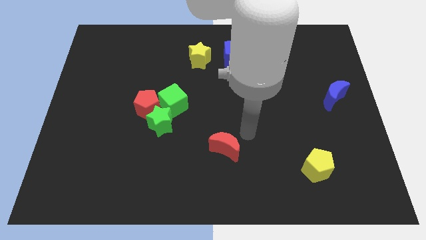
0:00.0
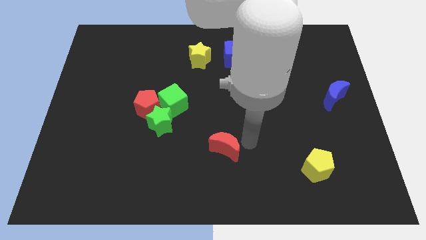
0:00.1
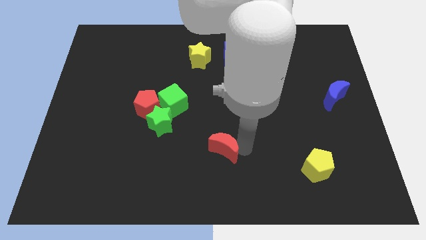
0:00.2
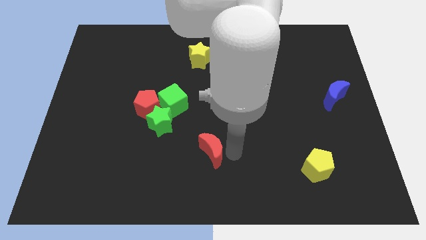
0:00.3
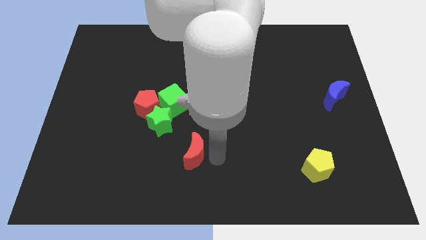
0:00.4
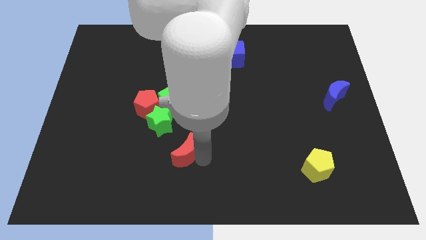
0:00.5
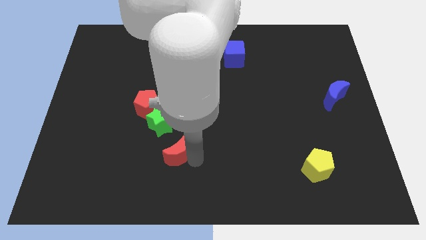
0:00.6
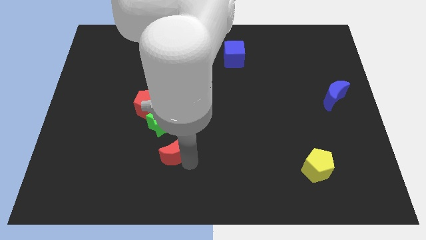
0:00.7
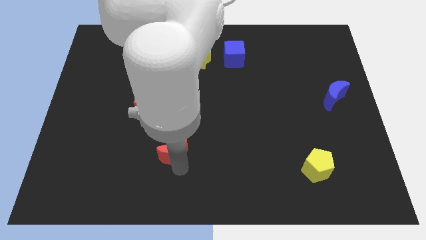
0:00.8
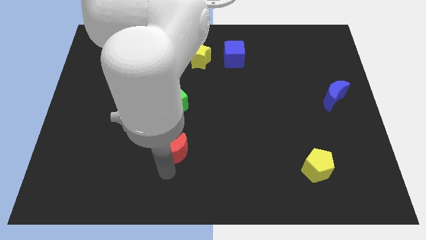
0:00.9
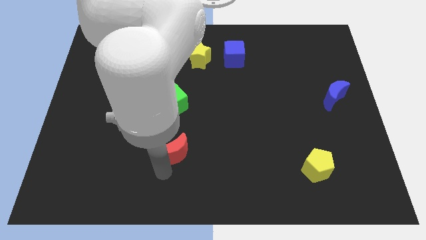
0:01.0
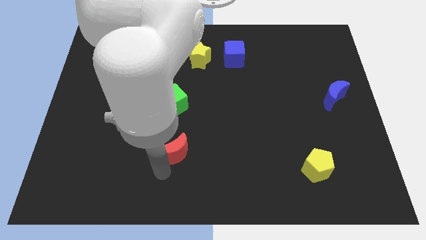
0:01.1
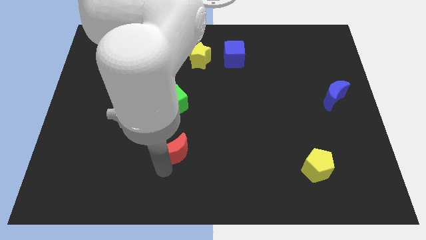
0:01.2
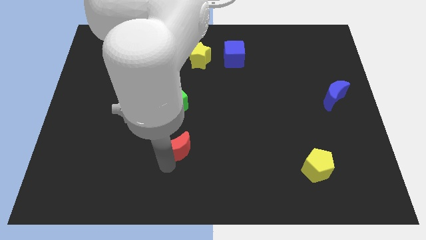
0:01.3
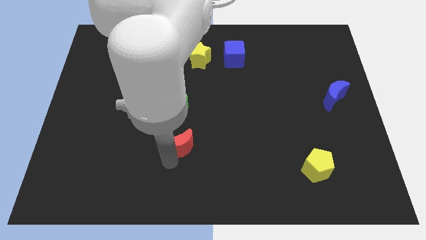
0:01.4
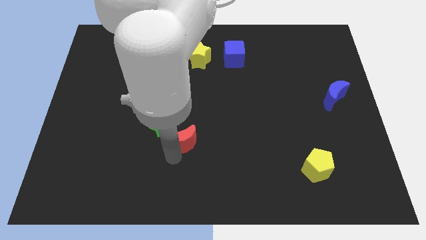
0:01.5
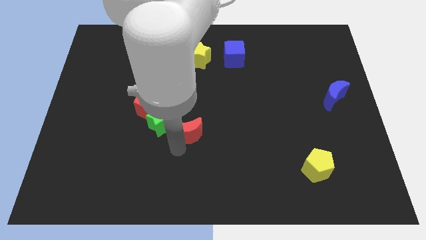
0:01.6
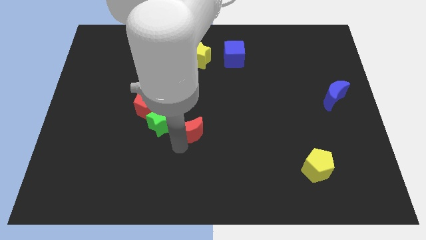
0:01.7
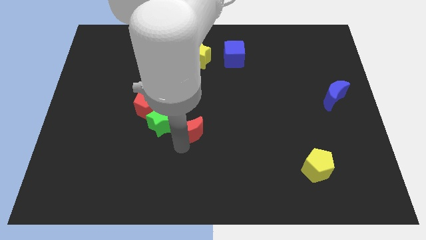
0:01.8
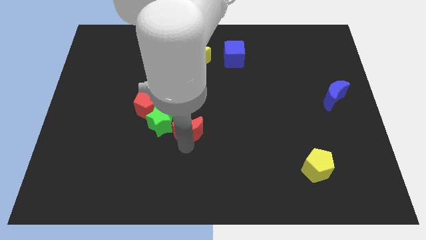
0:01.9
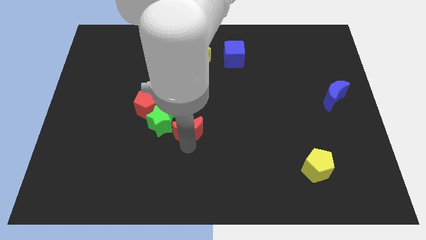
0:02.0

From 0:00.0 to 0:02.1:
place the red moon to the right of green star

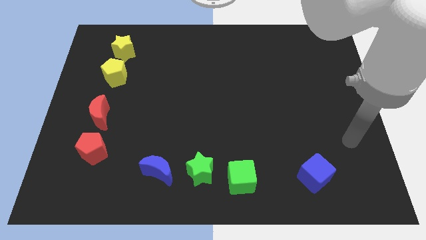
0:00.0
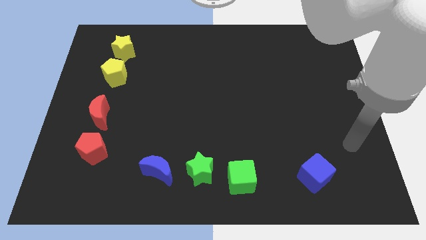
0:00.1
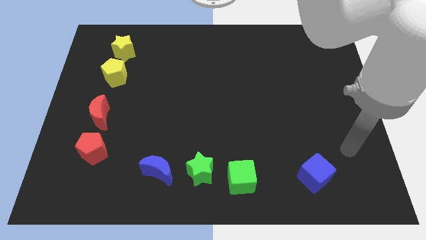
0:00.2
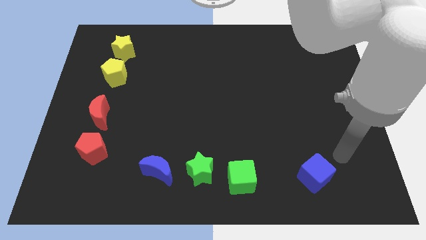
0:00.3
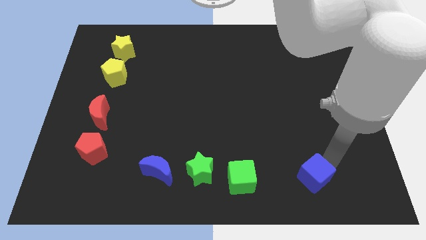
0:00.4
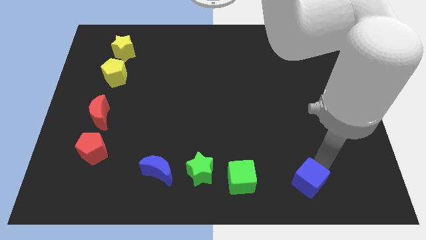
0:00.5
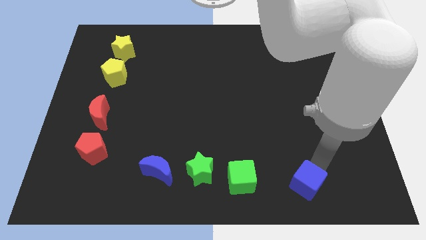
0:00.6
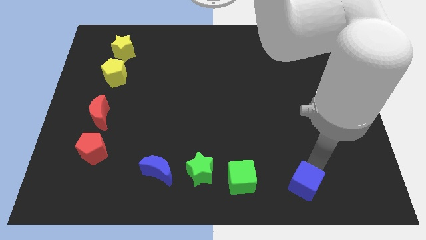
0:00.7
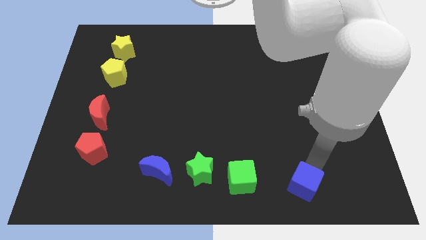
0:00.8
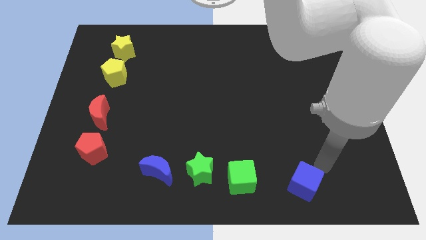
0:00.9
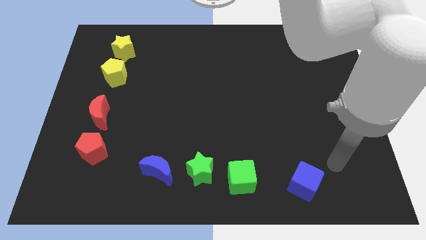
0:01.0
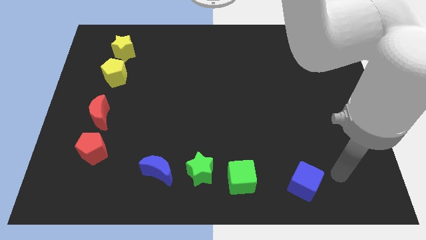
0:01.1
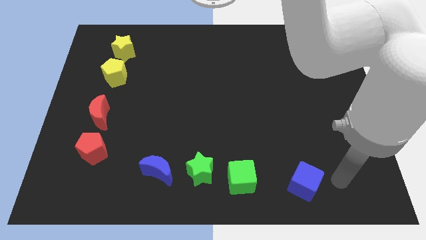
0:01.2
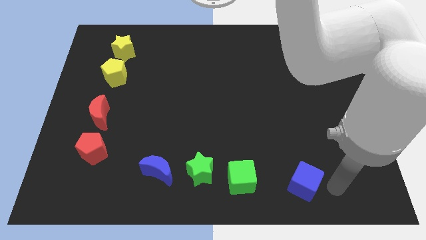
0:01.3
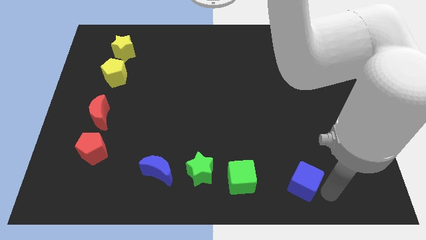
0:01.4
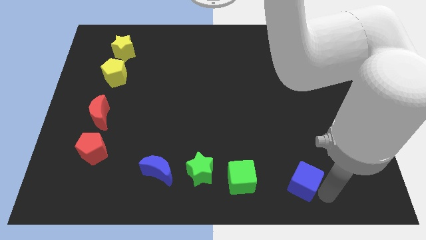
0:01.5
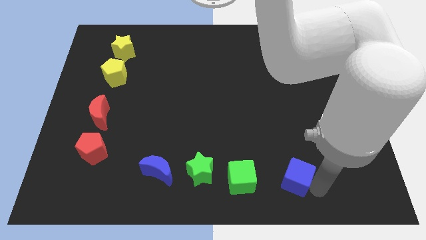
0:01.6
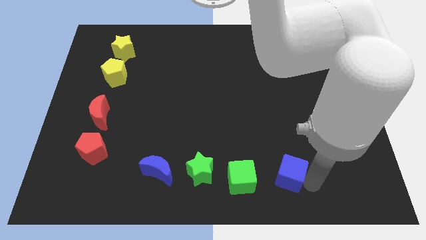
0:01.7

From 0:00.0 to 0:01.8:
put the blue cube to the right of the green cube to form a horizontal line of blocks

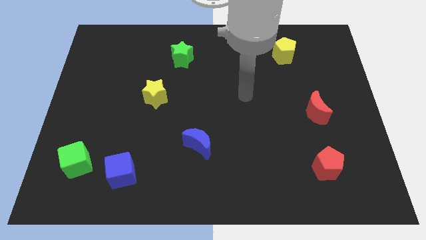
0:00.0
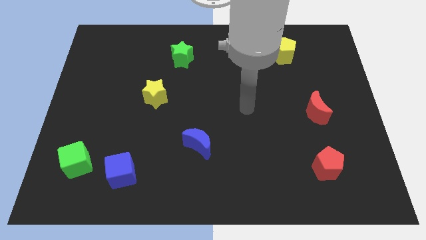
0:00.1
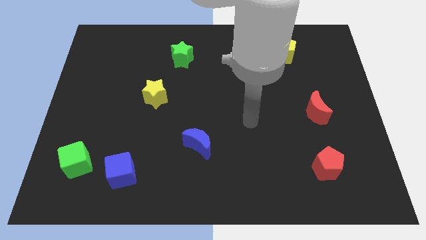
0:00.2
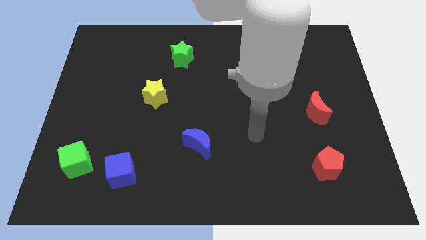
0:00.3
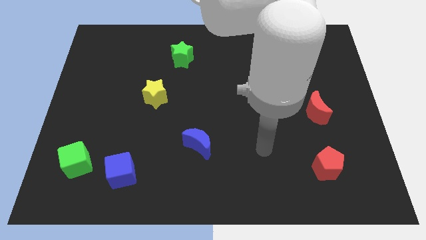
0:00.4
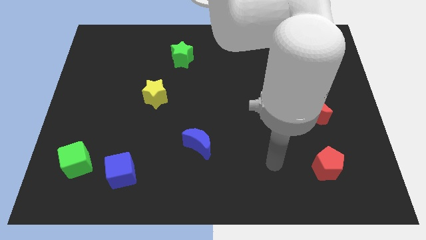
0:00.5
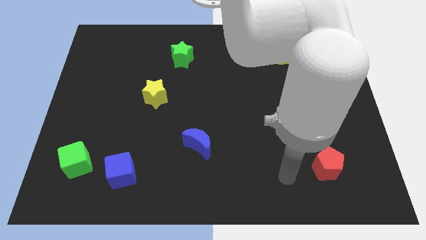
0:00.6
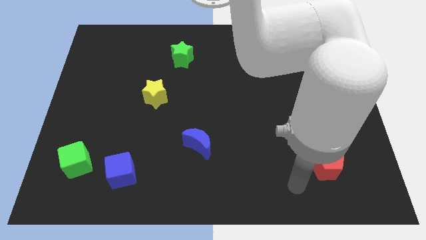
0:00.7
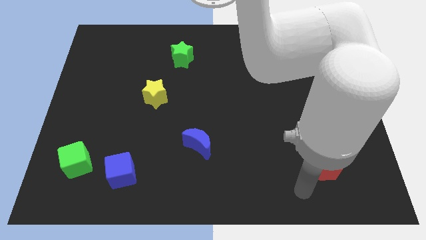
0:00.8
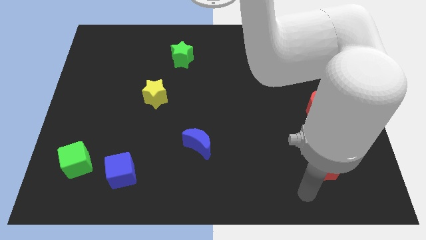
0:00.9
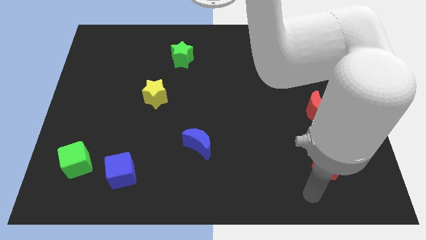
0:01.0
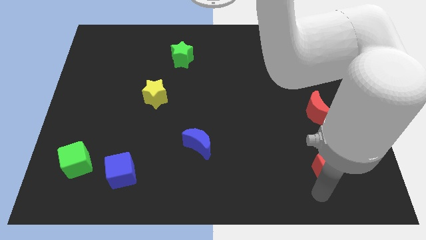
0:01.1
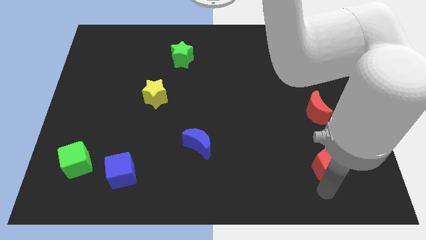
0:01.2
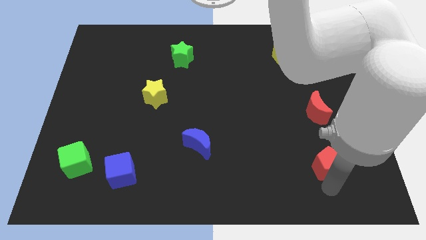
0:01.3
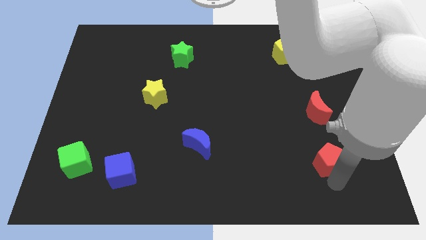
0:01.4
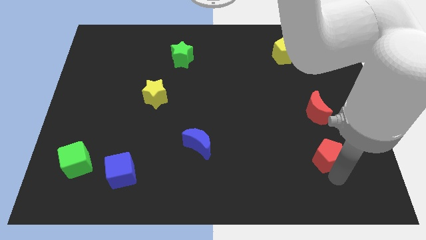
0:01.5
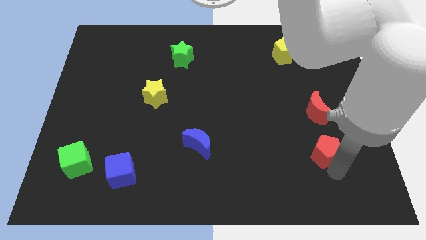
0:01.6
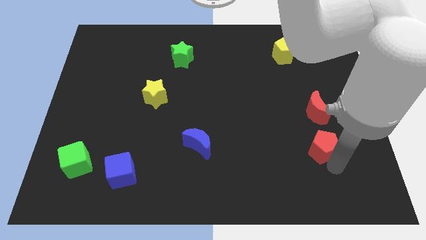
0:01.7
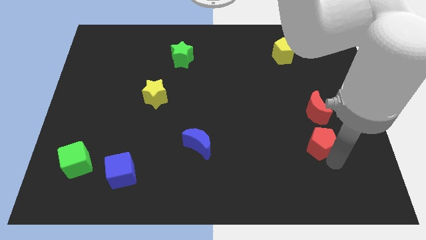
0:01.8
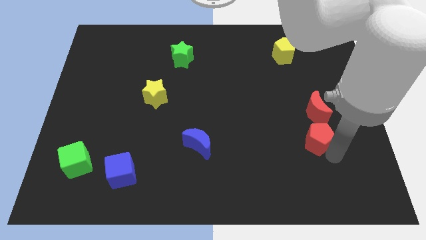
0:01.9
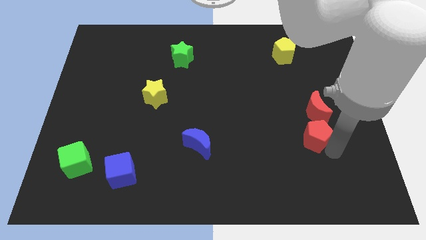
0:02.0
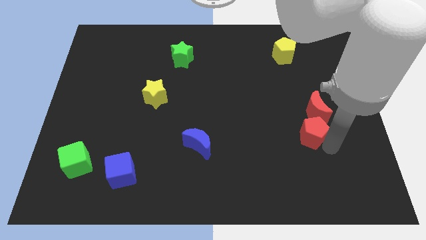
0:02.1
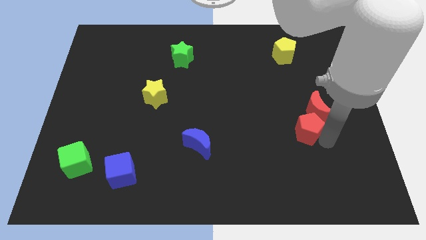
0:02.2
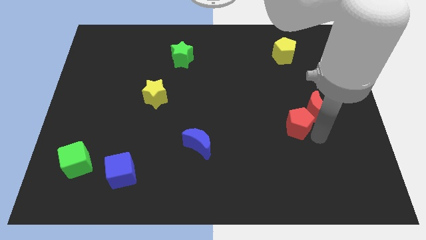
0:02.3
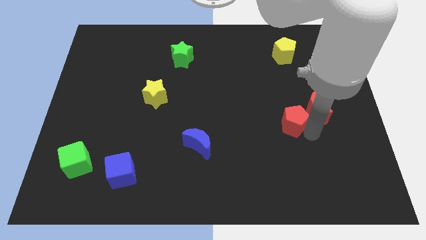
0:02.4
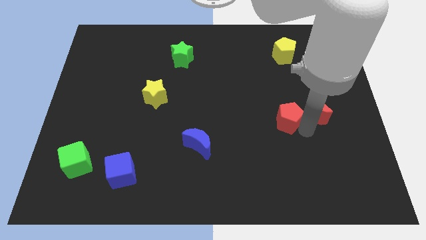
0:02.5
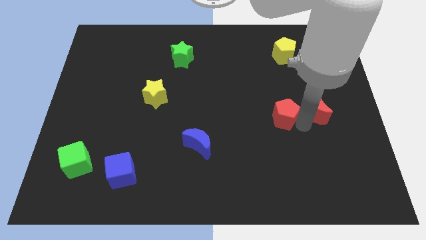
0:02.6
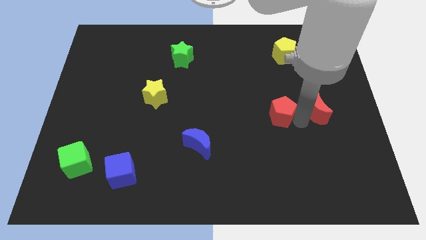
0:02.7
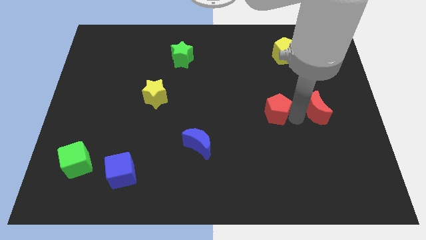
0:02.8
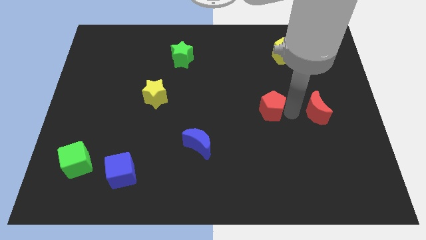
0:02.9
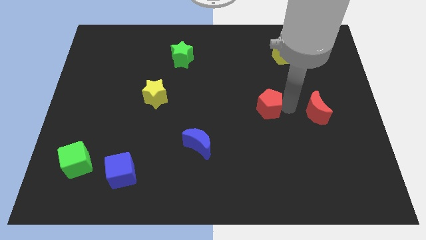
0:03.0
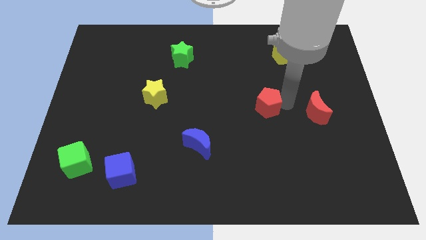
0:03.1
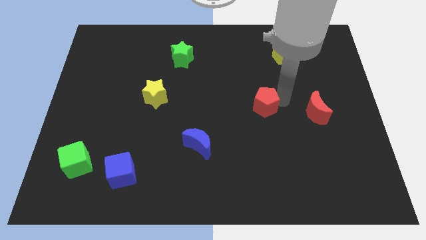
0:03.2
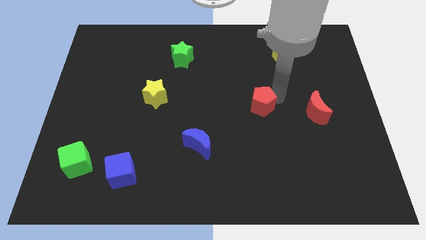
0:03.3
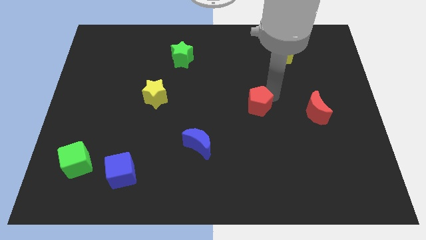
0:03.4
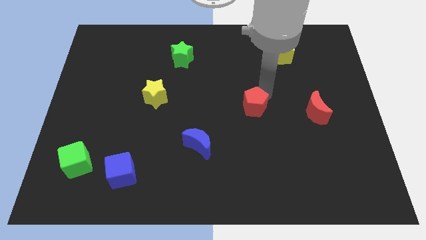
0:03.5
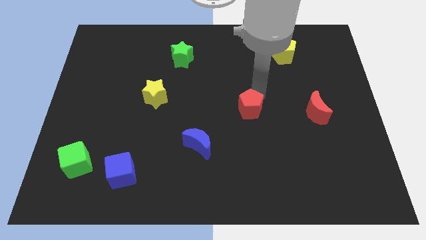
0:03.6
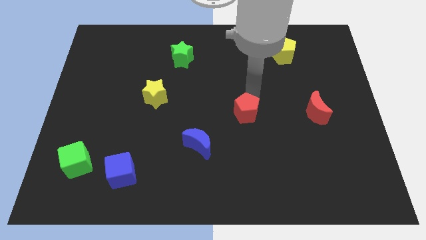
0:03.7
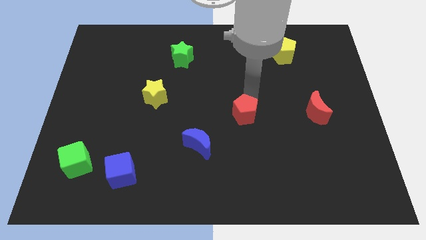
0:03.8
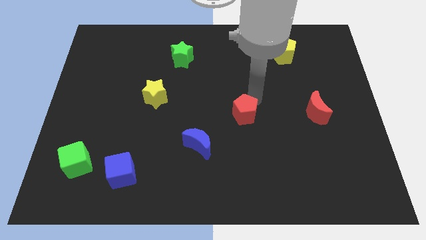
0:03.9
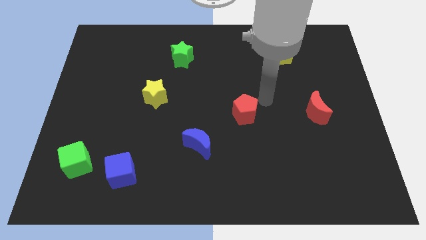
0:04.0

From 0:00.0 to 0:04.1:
push the red pentagon diagonal to the blue crescent

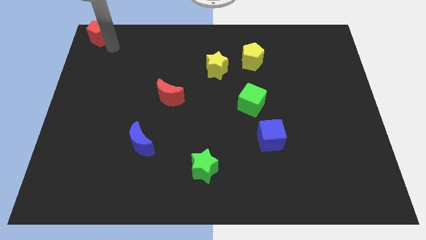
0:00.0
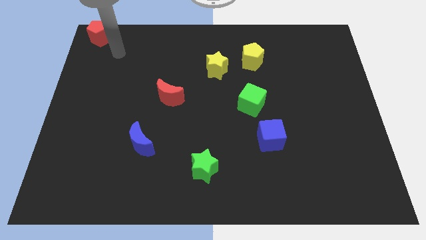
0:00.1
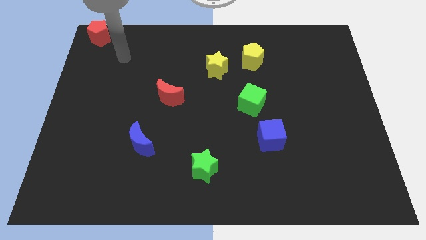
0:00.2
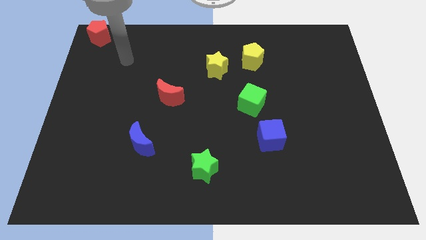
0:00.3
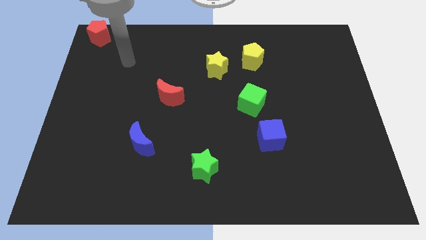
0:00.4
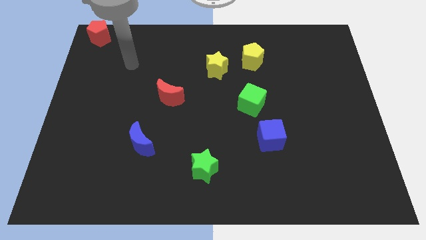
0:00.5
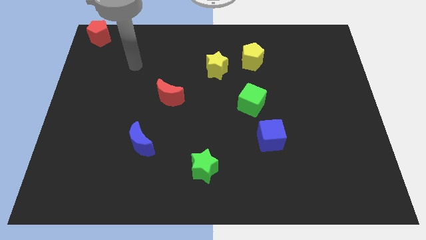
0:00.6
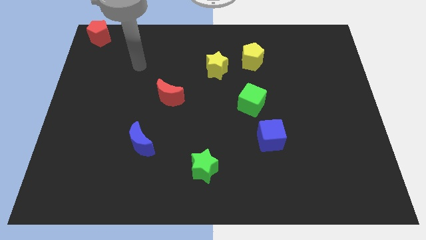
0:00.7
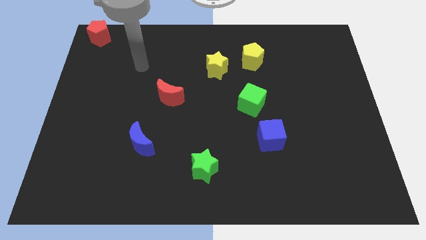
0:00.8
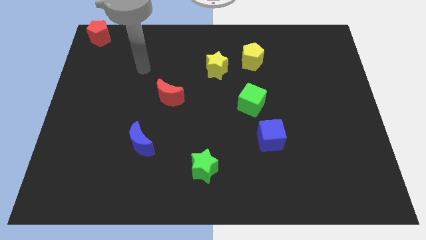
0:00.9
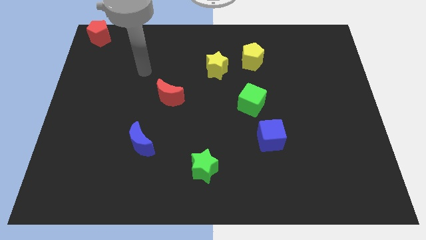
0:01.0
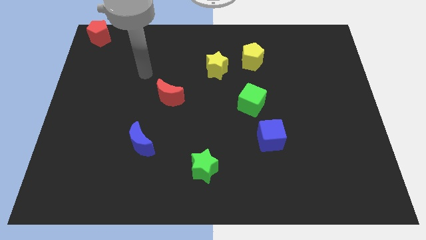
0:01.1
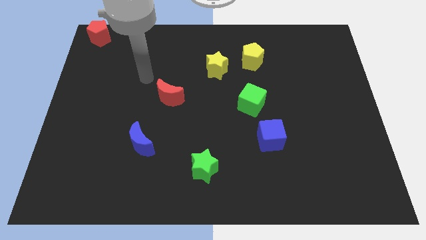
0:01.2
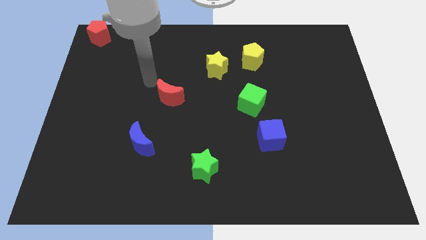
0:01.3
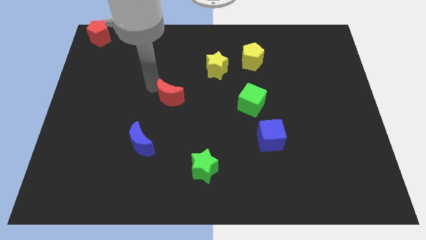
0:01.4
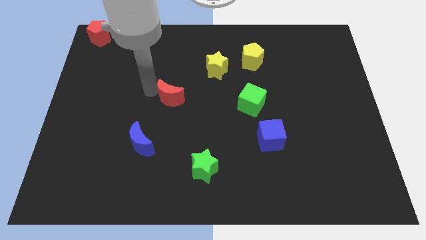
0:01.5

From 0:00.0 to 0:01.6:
tap the red crescent
